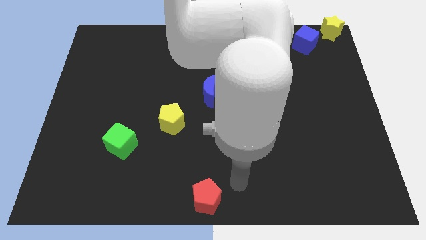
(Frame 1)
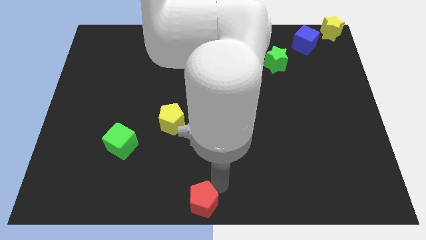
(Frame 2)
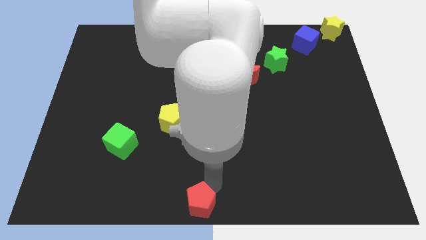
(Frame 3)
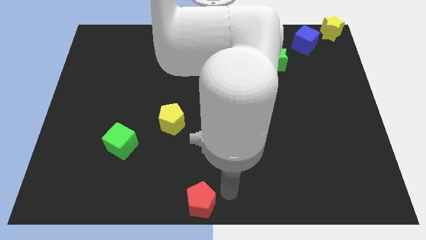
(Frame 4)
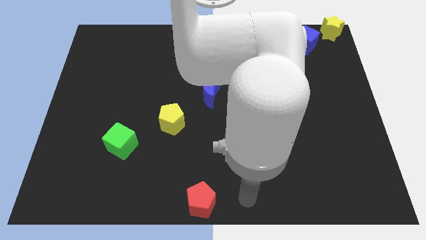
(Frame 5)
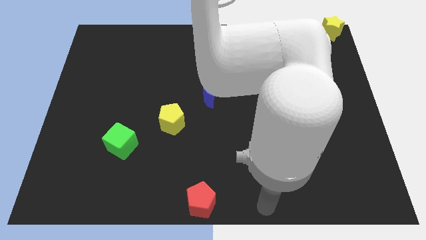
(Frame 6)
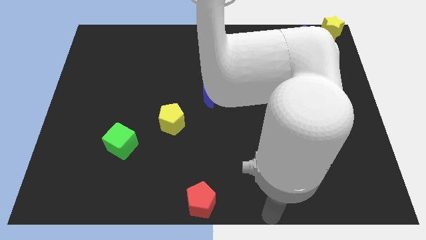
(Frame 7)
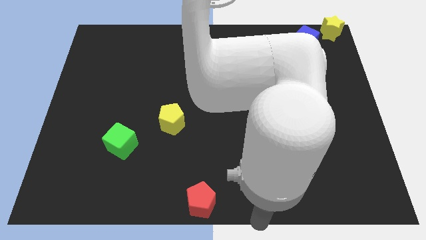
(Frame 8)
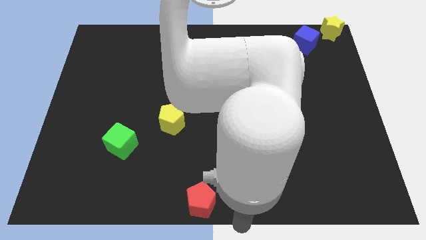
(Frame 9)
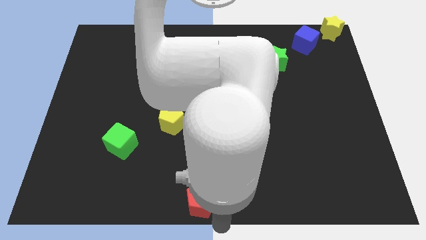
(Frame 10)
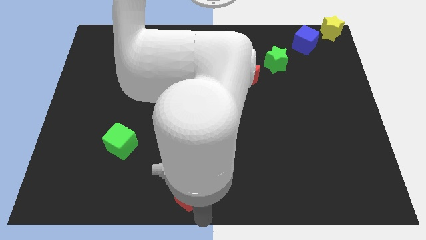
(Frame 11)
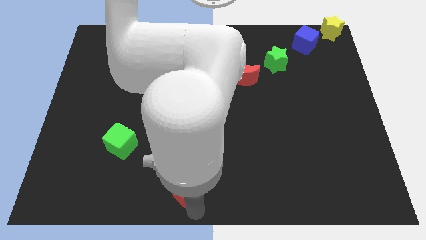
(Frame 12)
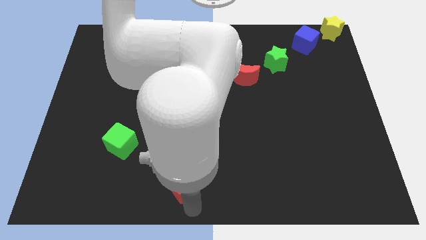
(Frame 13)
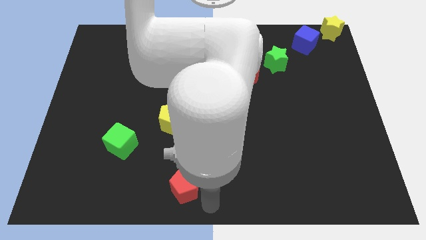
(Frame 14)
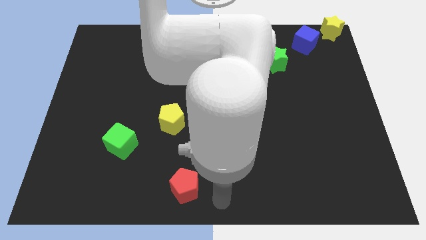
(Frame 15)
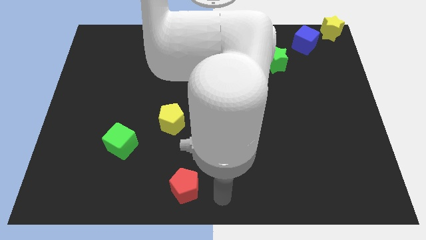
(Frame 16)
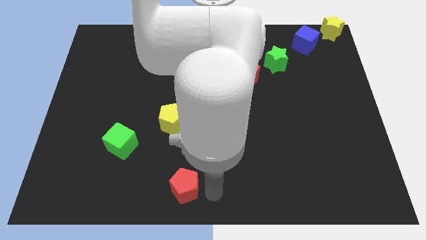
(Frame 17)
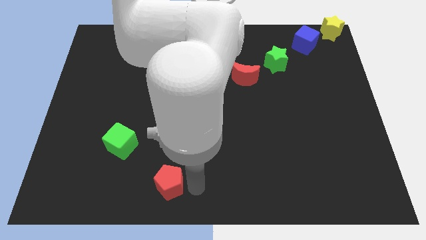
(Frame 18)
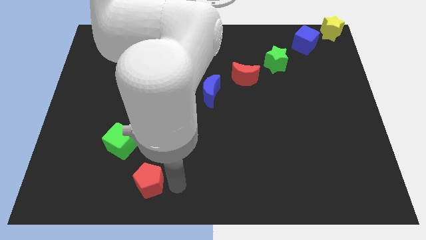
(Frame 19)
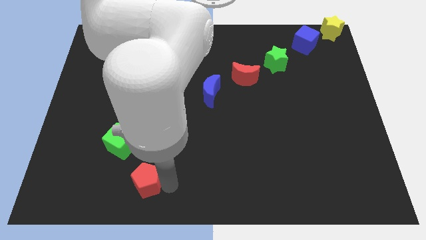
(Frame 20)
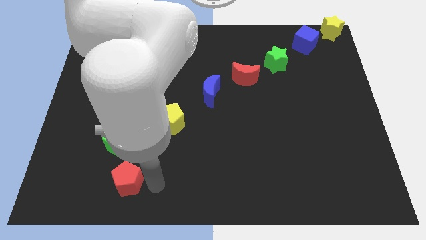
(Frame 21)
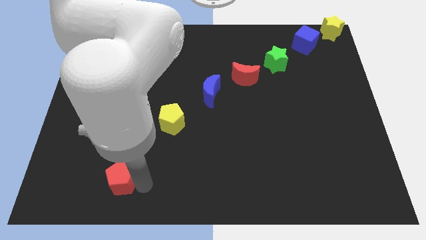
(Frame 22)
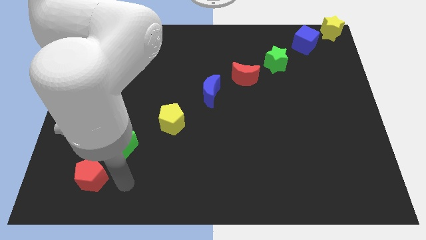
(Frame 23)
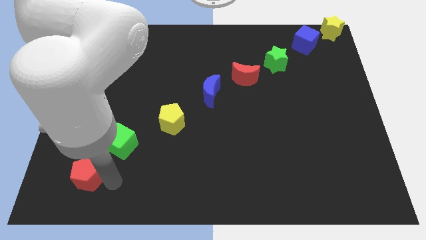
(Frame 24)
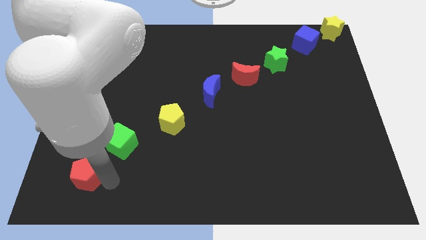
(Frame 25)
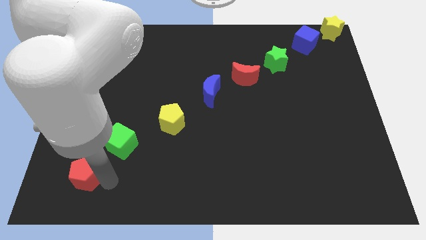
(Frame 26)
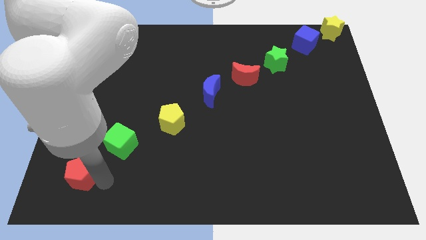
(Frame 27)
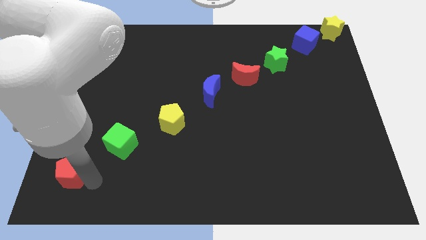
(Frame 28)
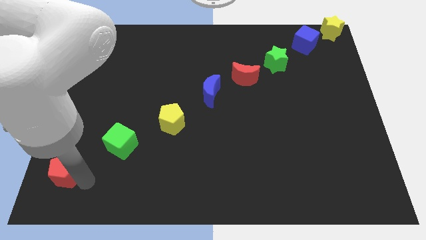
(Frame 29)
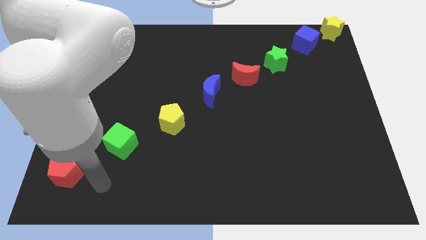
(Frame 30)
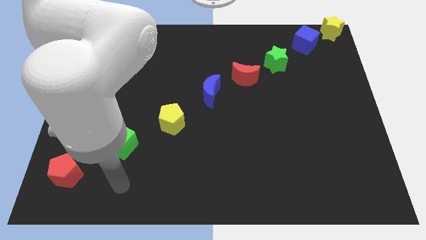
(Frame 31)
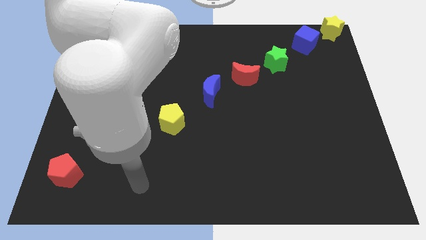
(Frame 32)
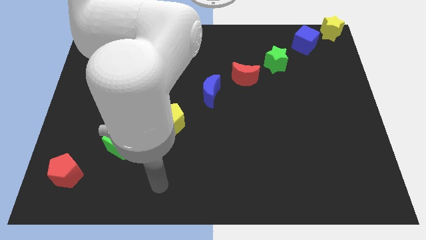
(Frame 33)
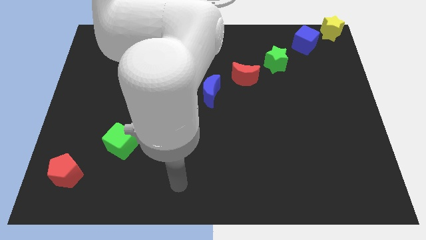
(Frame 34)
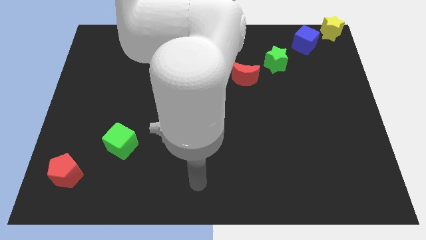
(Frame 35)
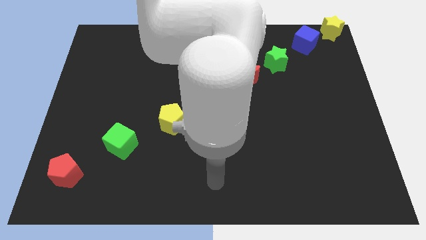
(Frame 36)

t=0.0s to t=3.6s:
push the red pentagon to the bottom left of the board

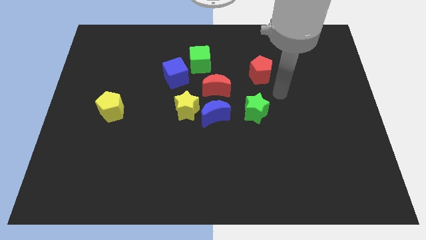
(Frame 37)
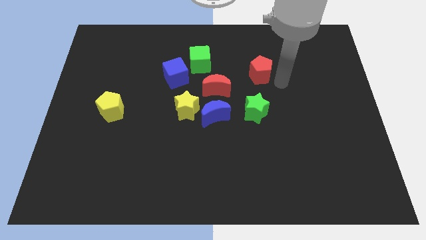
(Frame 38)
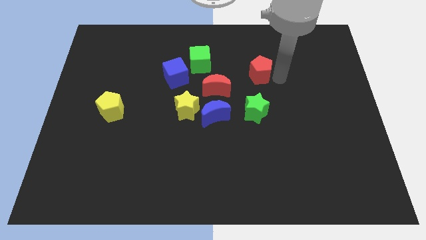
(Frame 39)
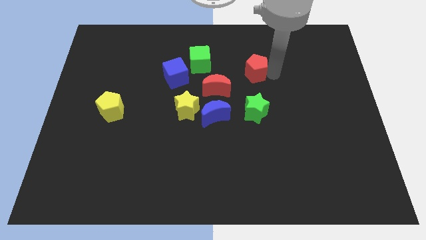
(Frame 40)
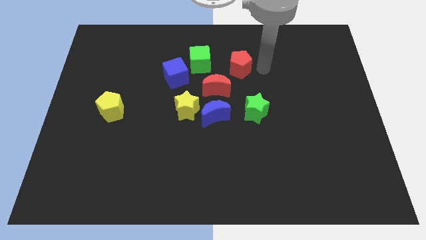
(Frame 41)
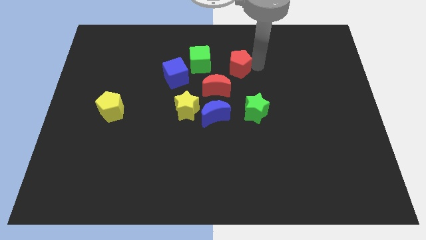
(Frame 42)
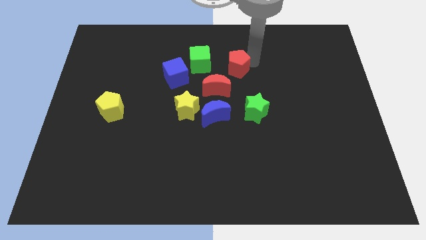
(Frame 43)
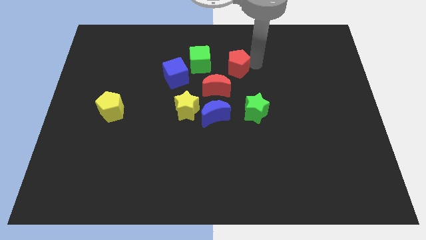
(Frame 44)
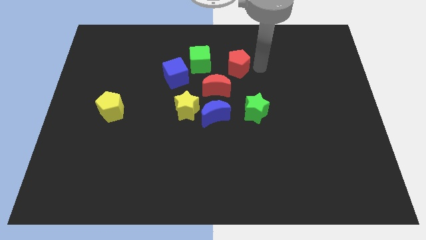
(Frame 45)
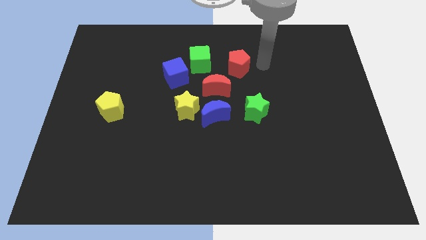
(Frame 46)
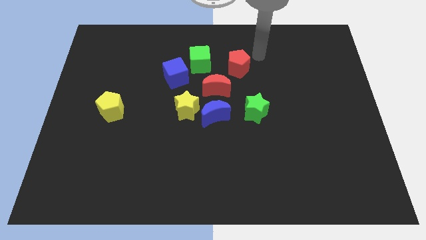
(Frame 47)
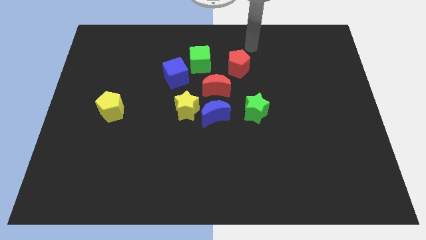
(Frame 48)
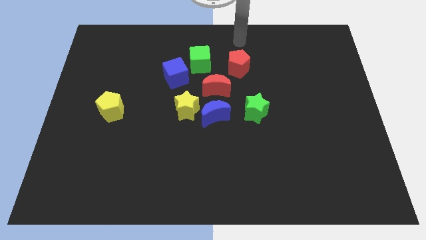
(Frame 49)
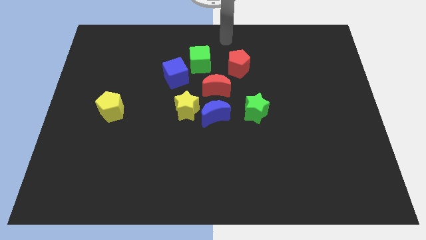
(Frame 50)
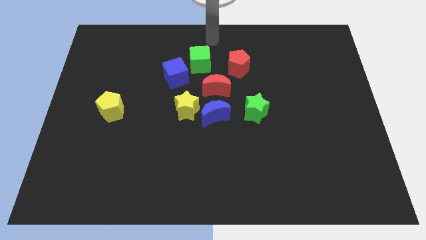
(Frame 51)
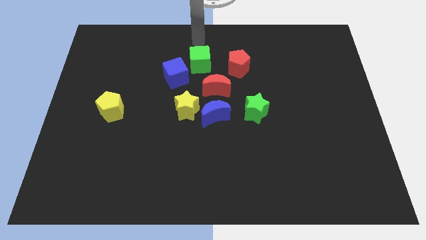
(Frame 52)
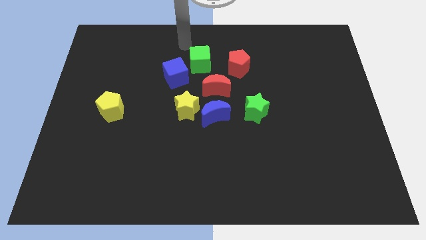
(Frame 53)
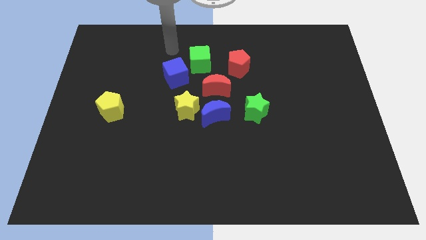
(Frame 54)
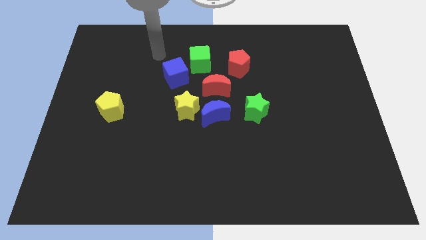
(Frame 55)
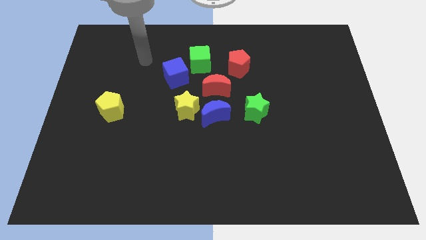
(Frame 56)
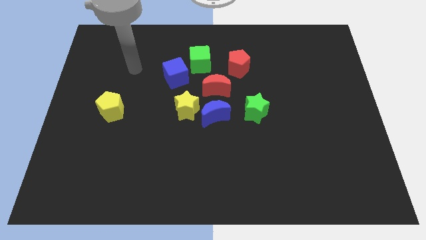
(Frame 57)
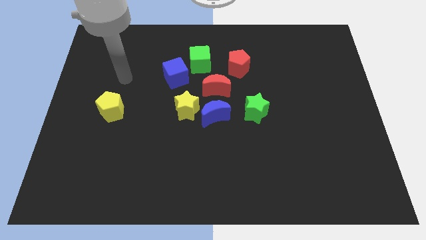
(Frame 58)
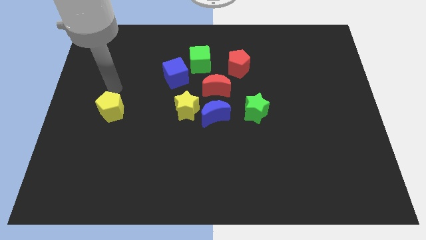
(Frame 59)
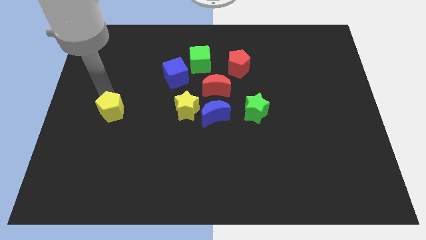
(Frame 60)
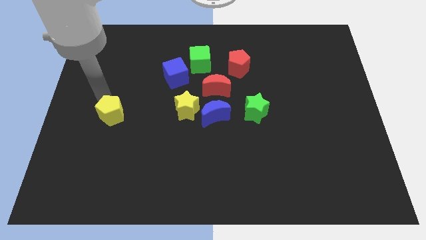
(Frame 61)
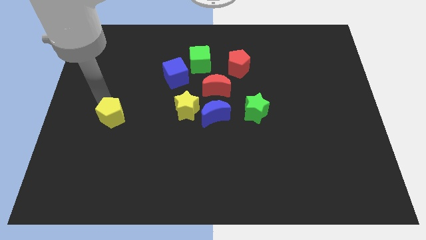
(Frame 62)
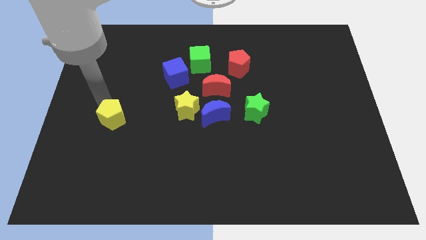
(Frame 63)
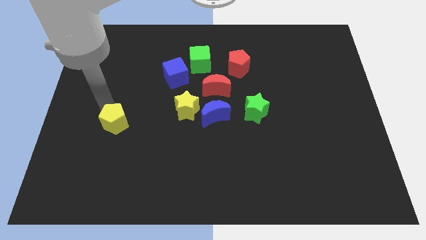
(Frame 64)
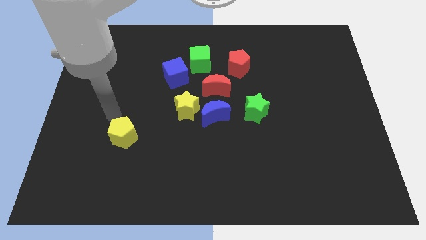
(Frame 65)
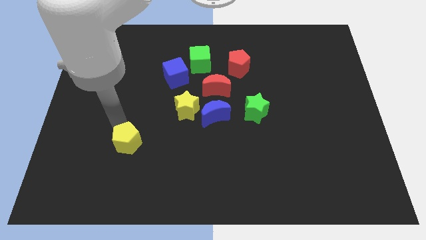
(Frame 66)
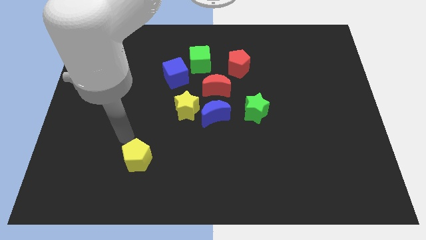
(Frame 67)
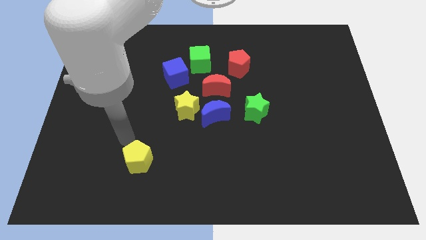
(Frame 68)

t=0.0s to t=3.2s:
drag the yellow pentagon to the bottom side

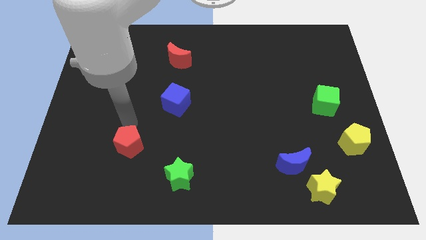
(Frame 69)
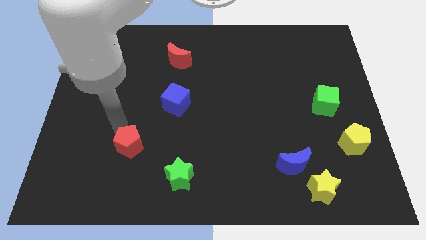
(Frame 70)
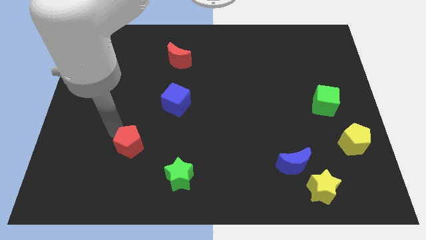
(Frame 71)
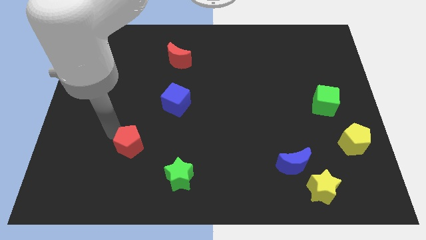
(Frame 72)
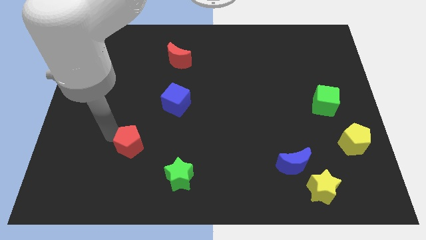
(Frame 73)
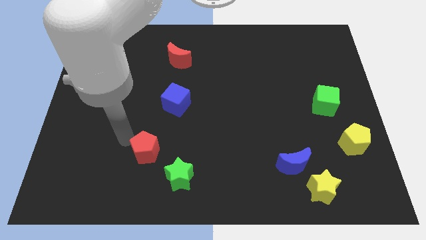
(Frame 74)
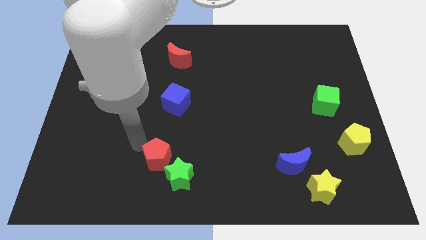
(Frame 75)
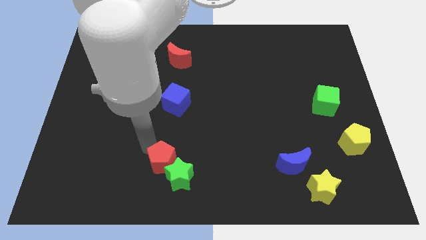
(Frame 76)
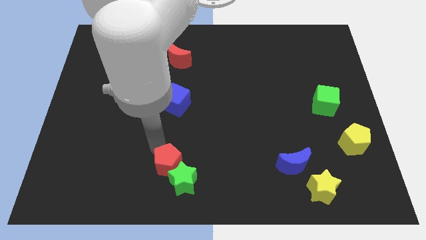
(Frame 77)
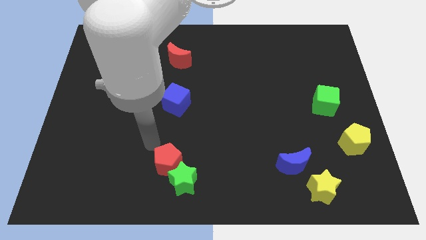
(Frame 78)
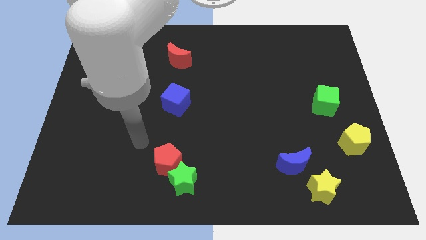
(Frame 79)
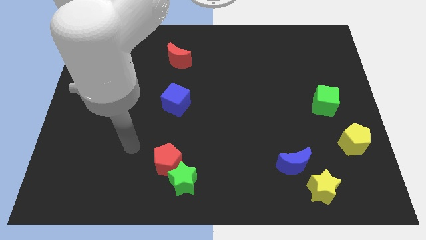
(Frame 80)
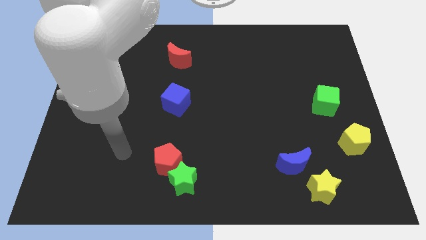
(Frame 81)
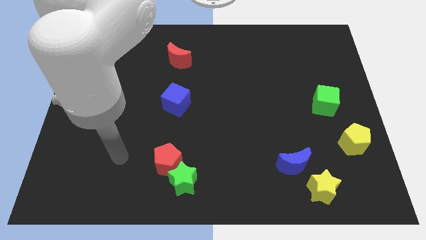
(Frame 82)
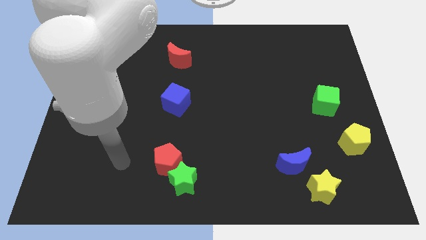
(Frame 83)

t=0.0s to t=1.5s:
push the red pentagon and green star towards the bottom center of the board

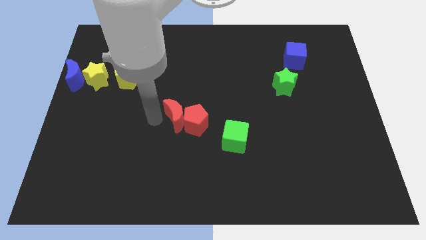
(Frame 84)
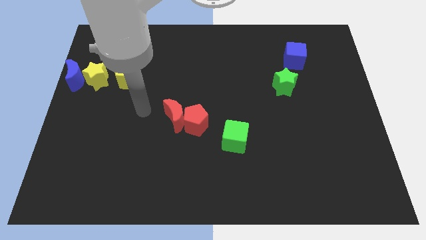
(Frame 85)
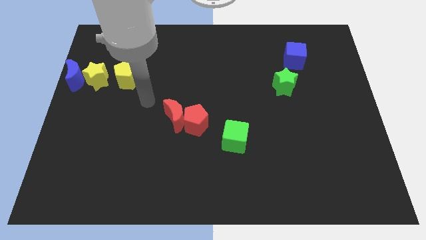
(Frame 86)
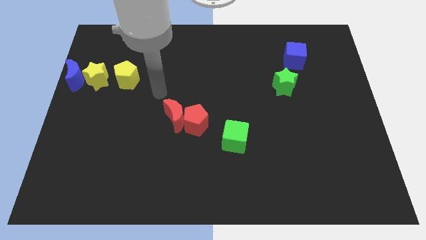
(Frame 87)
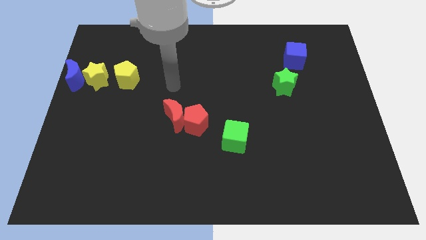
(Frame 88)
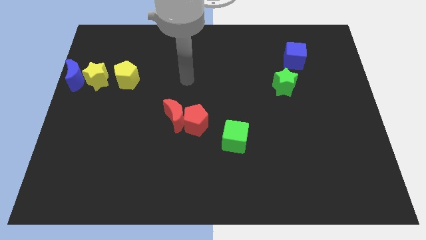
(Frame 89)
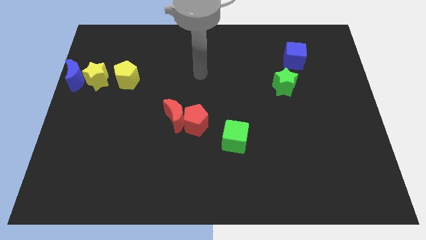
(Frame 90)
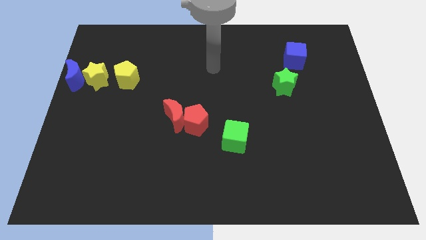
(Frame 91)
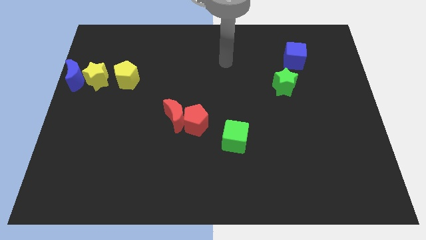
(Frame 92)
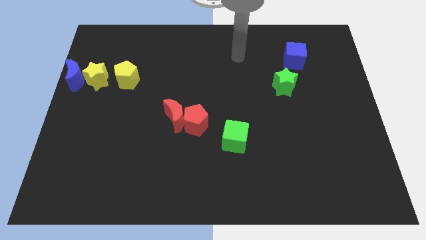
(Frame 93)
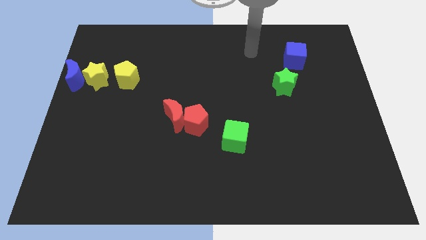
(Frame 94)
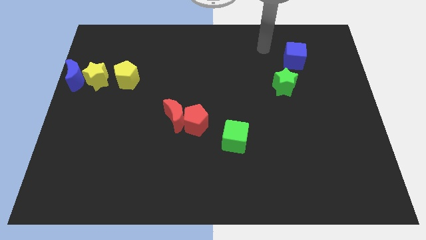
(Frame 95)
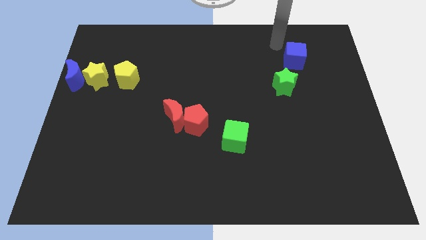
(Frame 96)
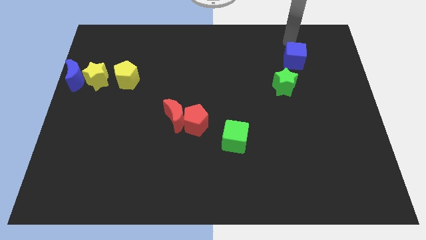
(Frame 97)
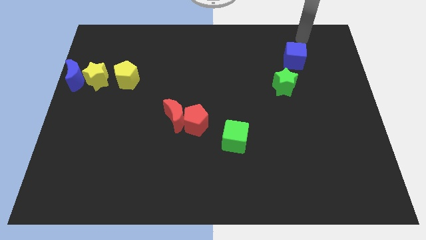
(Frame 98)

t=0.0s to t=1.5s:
put your arm above the blue cube
